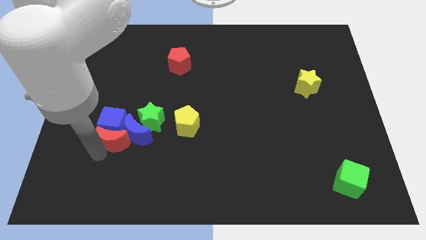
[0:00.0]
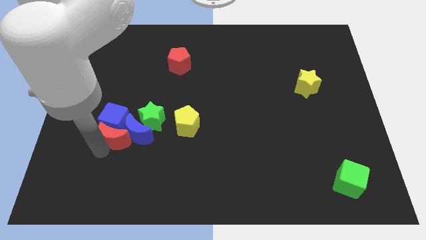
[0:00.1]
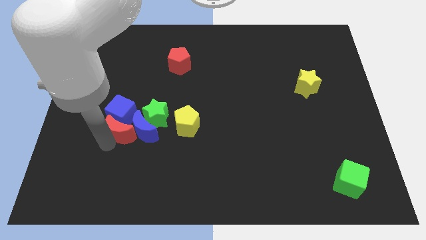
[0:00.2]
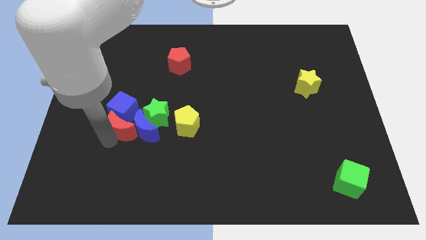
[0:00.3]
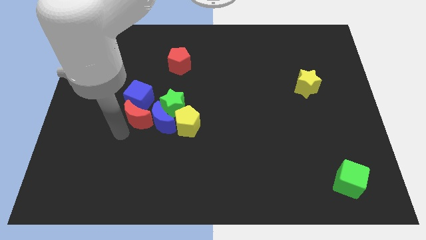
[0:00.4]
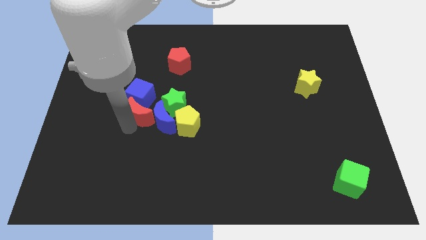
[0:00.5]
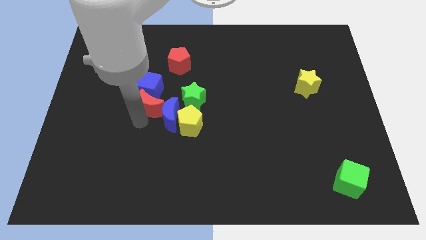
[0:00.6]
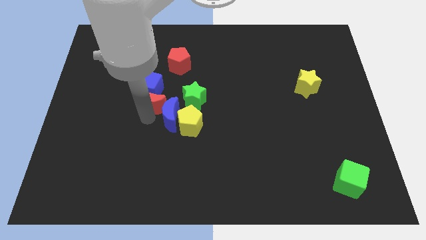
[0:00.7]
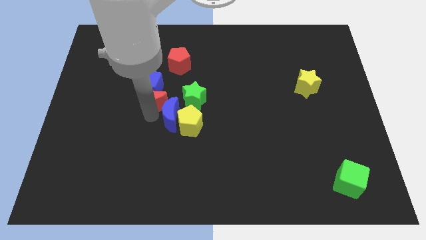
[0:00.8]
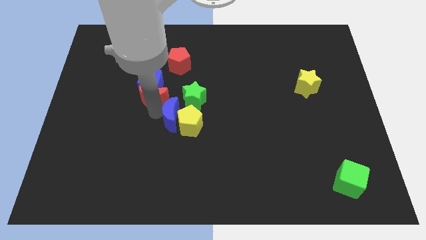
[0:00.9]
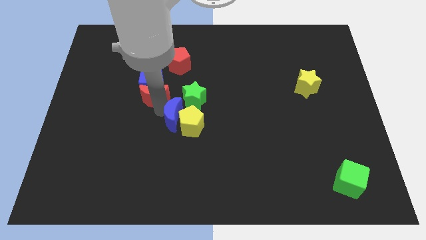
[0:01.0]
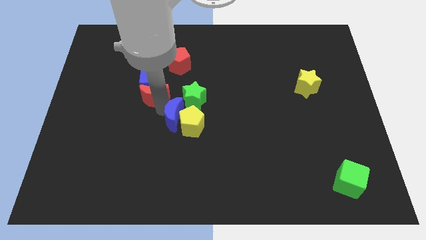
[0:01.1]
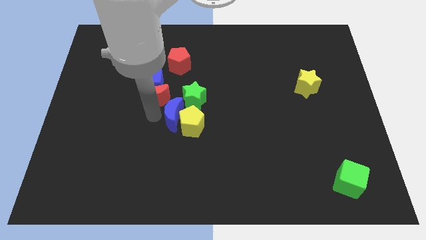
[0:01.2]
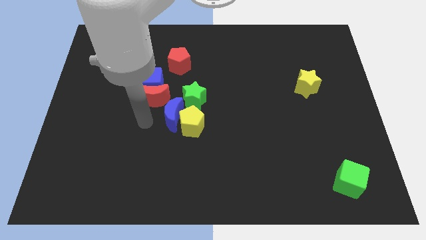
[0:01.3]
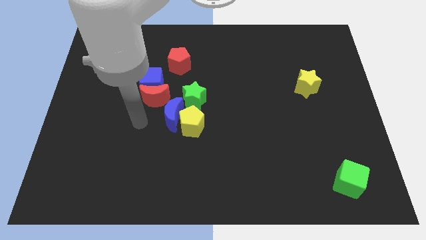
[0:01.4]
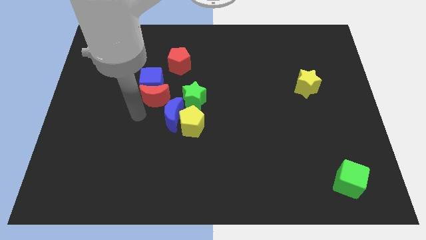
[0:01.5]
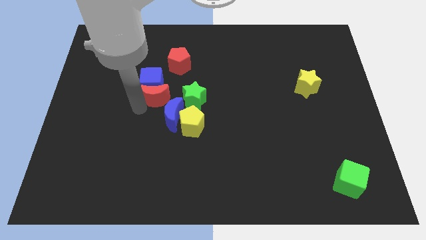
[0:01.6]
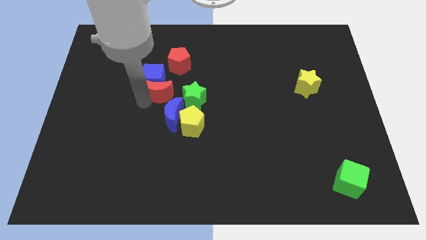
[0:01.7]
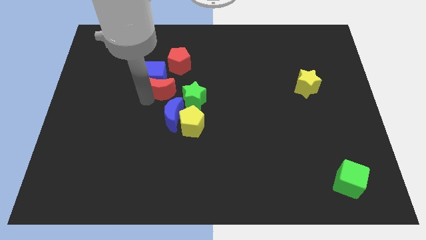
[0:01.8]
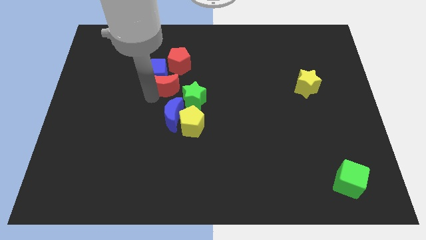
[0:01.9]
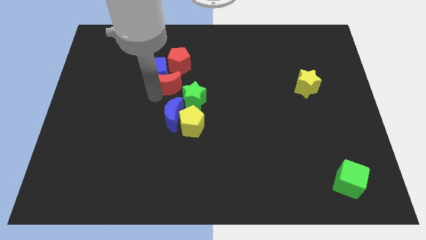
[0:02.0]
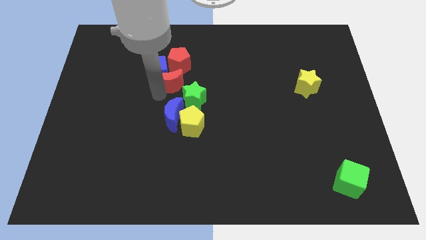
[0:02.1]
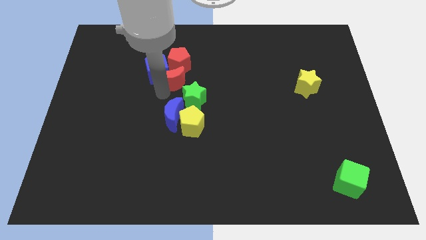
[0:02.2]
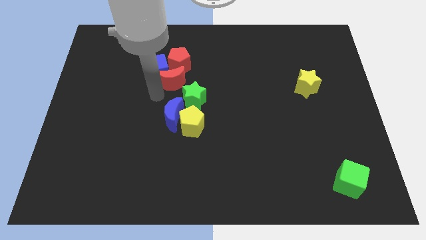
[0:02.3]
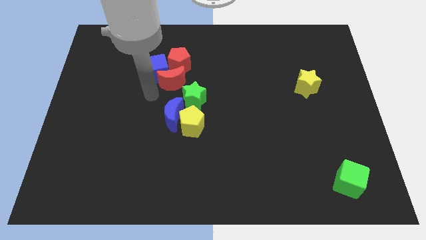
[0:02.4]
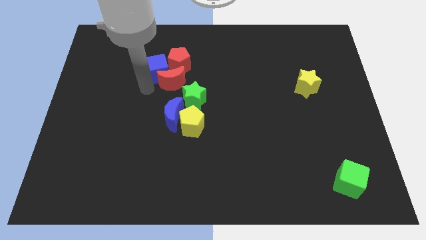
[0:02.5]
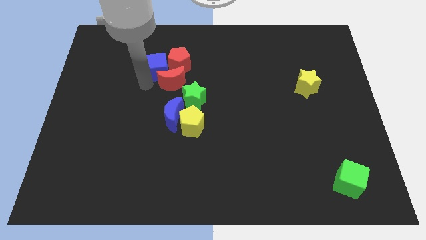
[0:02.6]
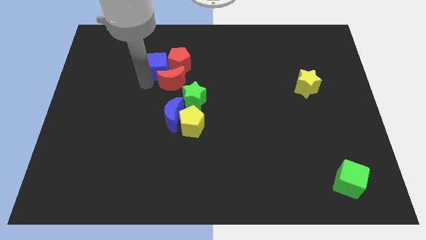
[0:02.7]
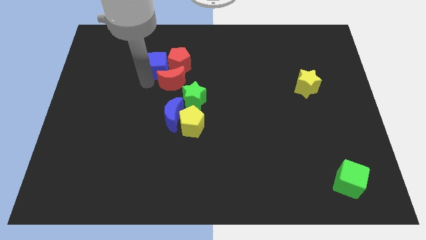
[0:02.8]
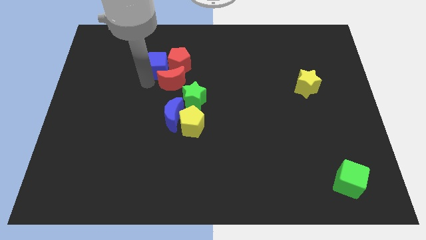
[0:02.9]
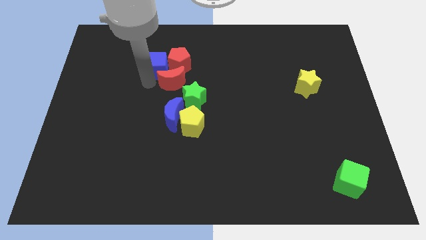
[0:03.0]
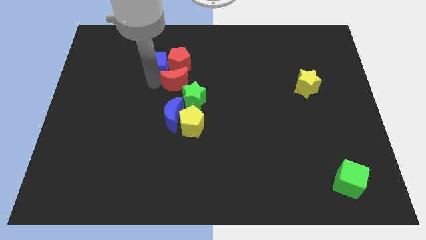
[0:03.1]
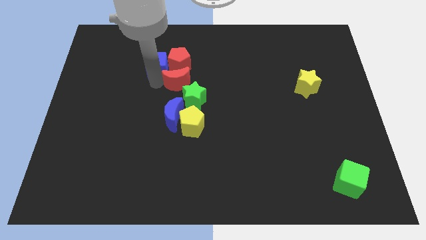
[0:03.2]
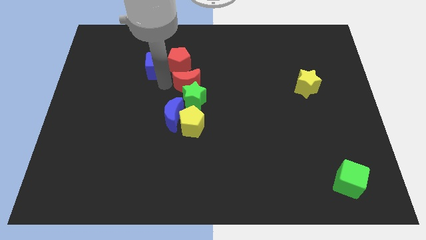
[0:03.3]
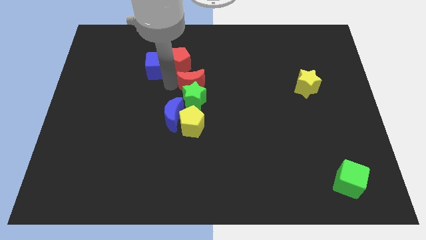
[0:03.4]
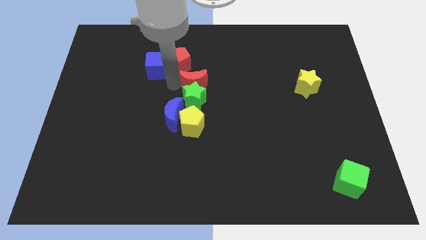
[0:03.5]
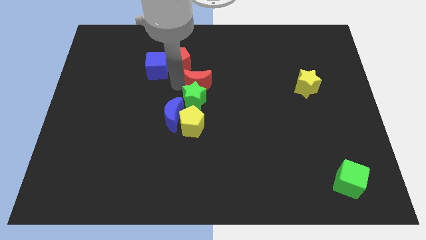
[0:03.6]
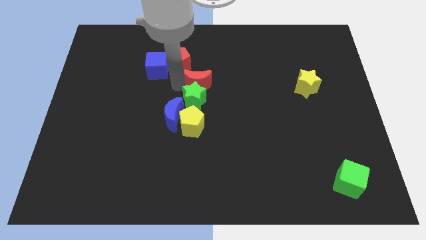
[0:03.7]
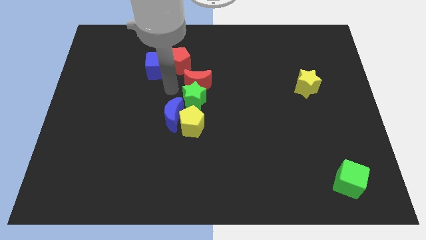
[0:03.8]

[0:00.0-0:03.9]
push a group of blocks to the center of the board

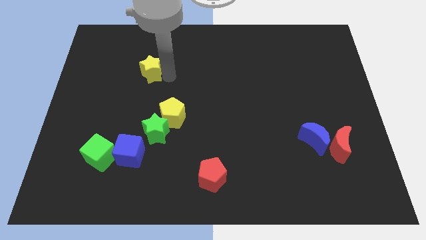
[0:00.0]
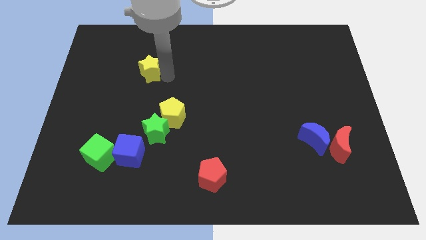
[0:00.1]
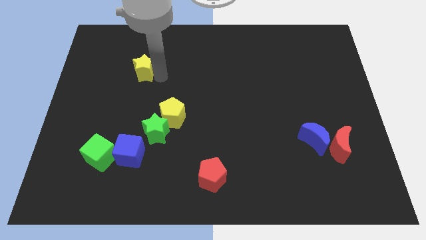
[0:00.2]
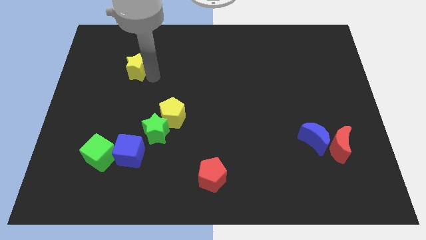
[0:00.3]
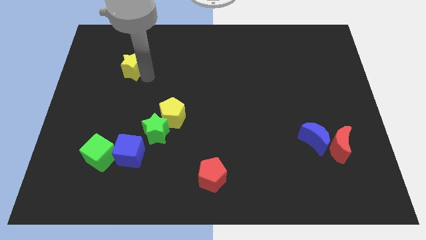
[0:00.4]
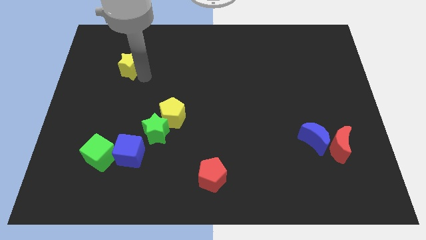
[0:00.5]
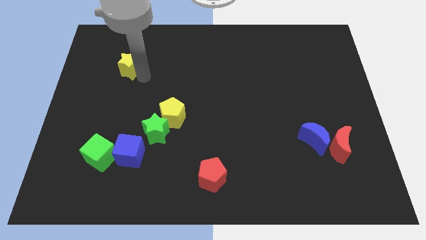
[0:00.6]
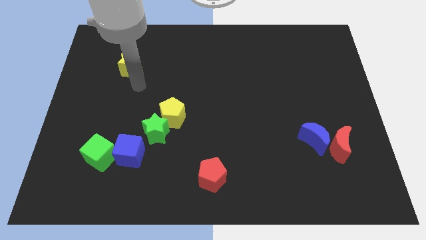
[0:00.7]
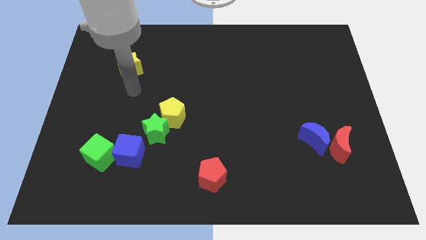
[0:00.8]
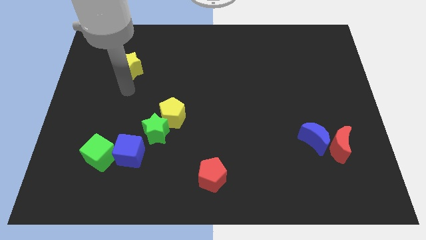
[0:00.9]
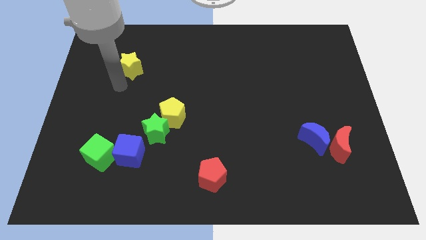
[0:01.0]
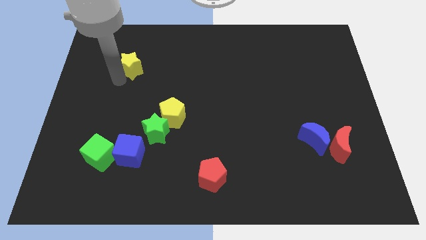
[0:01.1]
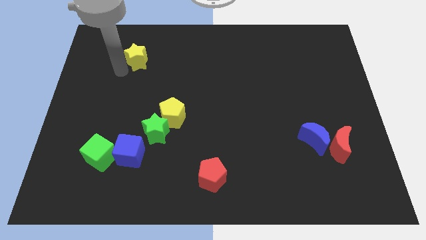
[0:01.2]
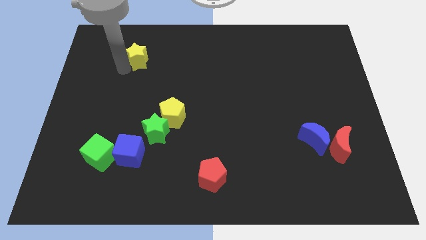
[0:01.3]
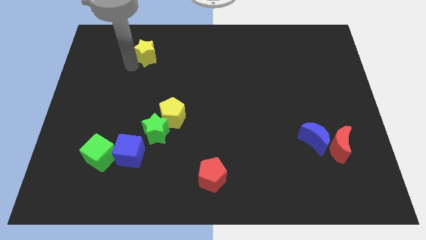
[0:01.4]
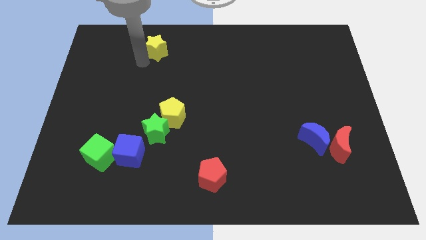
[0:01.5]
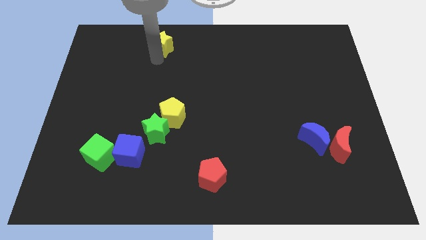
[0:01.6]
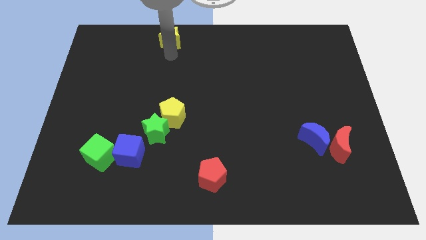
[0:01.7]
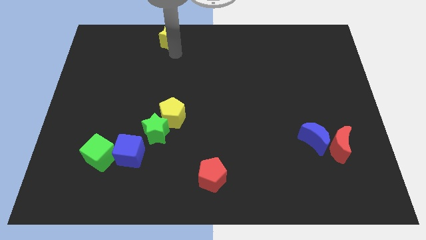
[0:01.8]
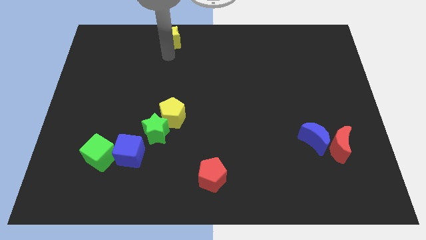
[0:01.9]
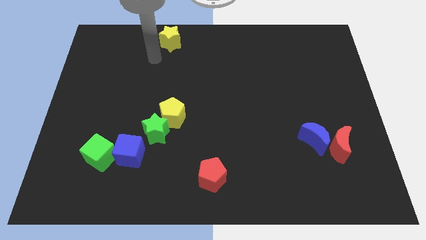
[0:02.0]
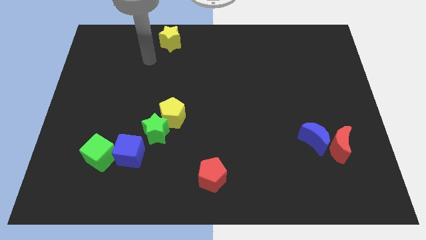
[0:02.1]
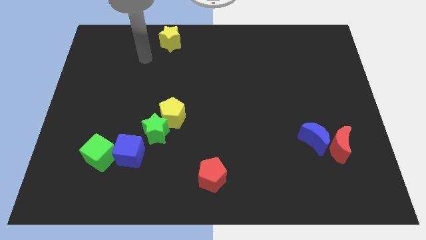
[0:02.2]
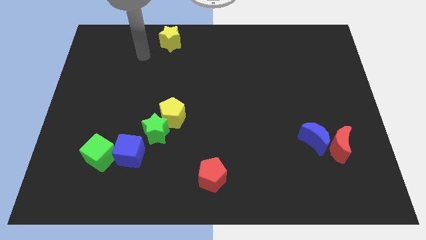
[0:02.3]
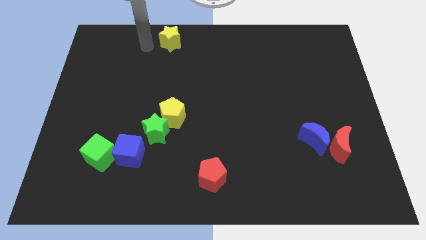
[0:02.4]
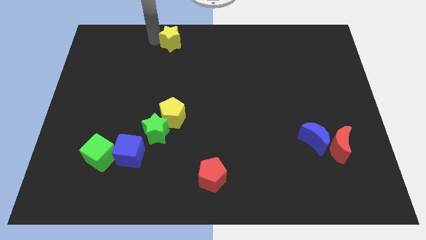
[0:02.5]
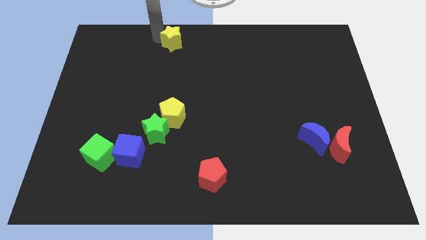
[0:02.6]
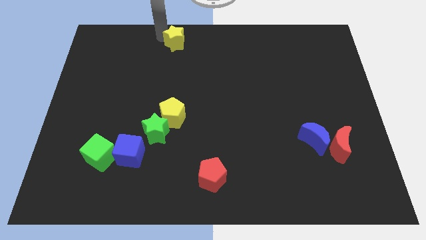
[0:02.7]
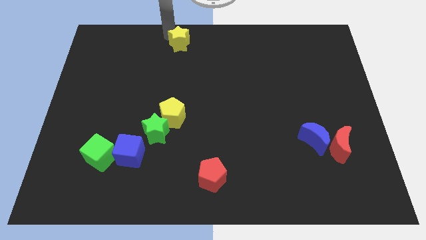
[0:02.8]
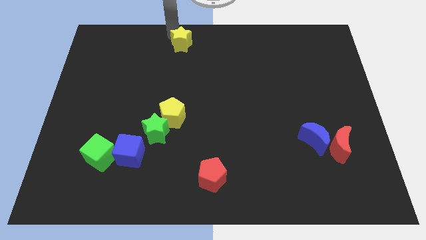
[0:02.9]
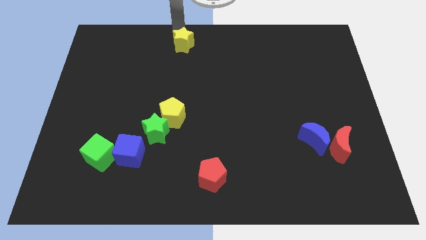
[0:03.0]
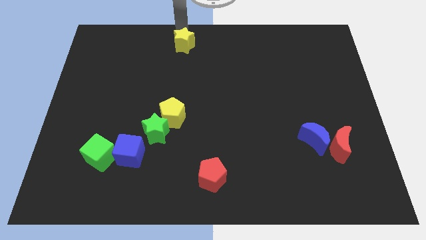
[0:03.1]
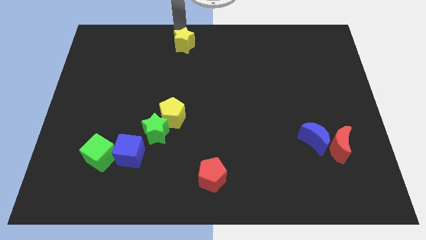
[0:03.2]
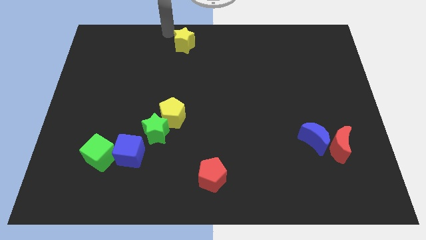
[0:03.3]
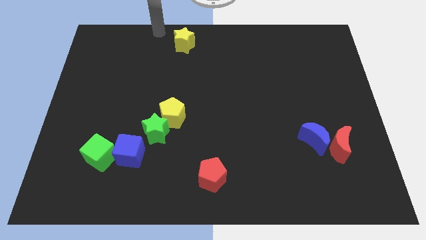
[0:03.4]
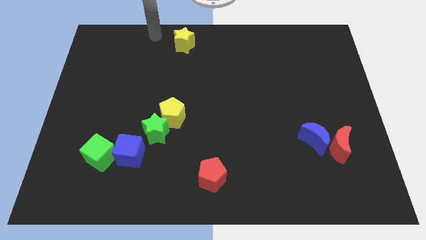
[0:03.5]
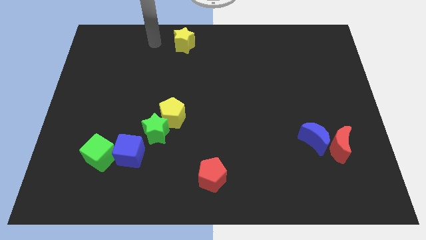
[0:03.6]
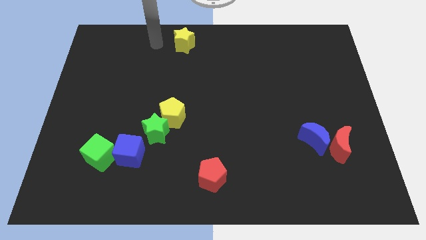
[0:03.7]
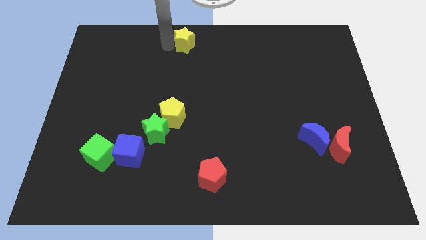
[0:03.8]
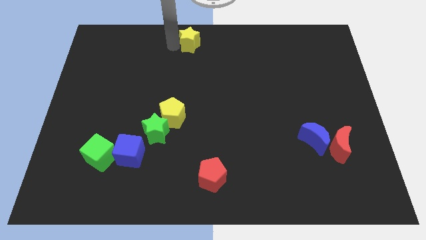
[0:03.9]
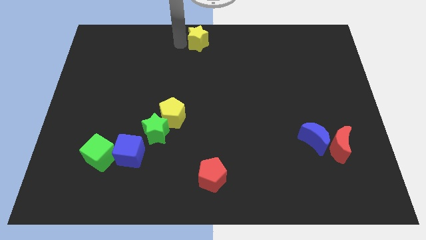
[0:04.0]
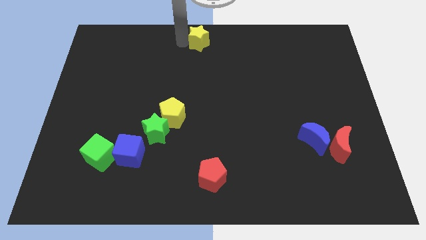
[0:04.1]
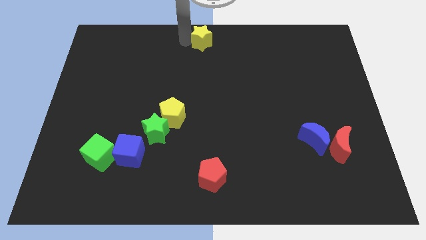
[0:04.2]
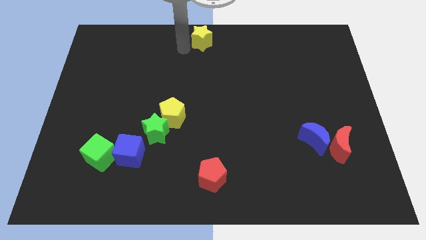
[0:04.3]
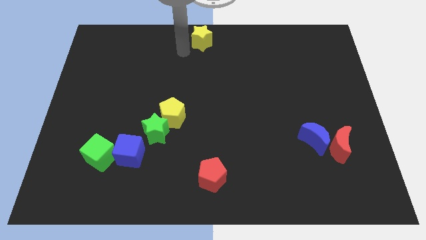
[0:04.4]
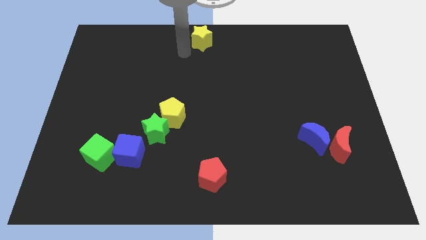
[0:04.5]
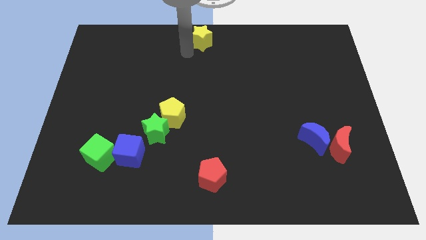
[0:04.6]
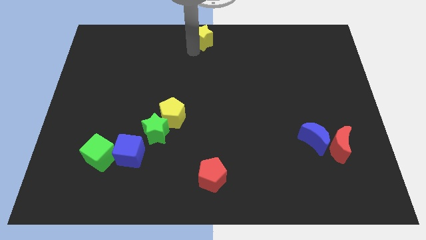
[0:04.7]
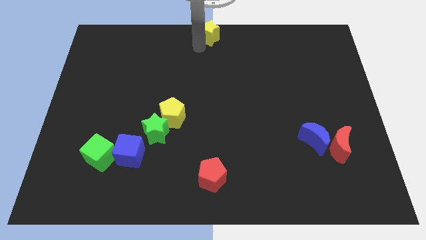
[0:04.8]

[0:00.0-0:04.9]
push the yellow star to the top center of the board

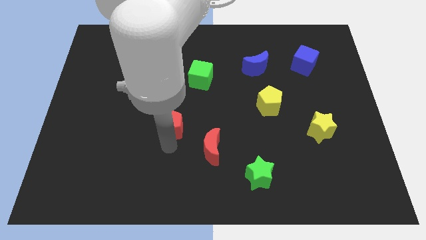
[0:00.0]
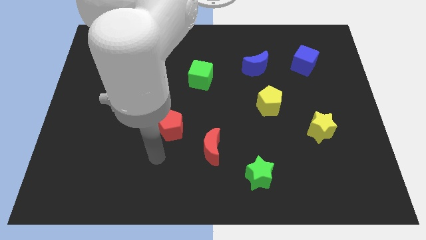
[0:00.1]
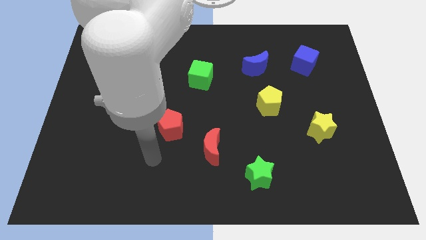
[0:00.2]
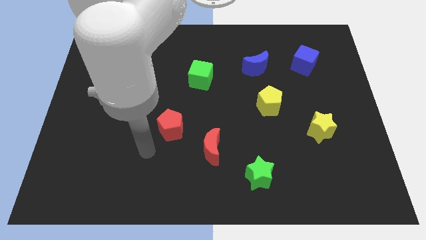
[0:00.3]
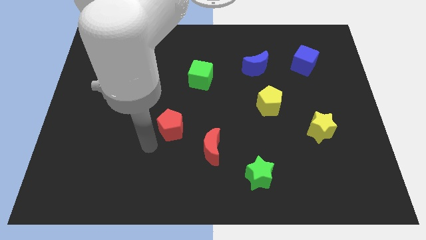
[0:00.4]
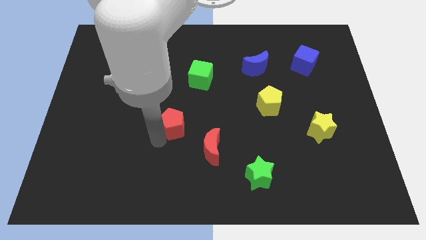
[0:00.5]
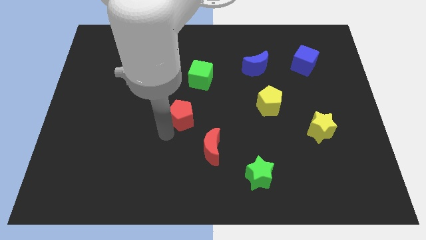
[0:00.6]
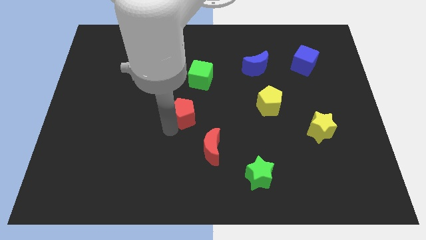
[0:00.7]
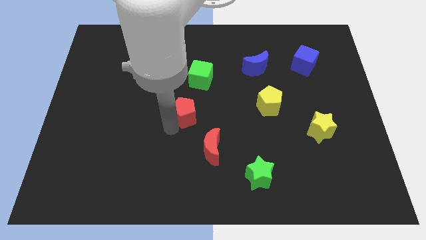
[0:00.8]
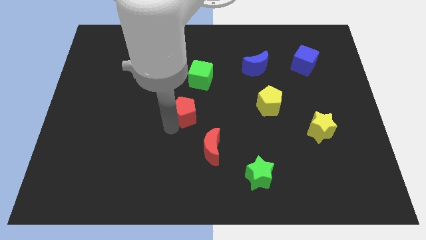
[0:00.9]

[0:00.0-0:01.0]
push the red pentagon towards the green cube
